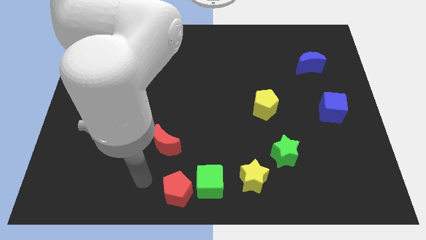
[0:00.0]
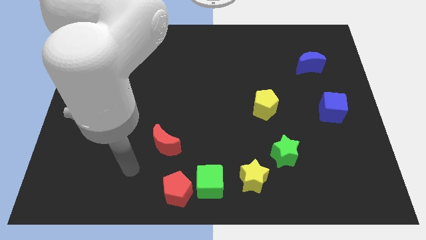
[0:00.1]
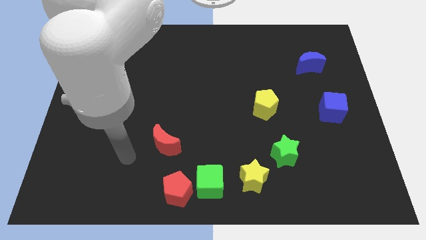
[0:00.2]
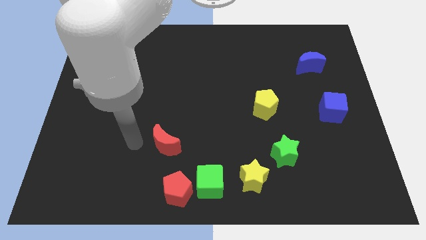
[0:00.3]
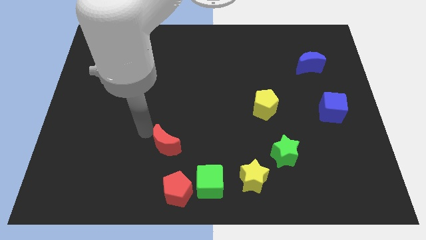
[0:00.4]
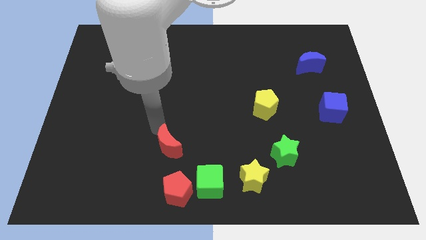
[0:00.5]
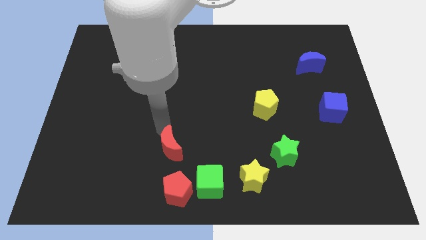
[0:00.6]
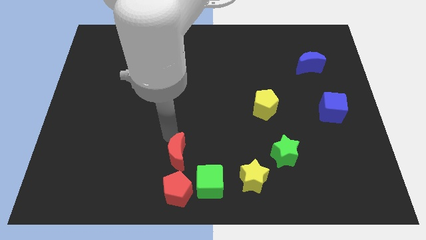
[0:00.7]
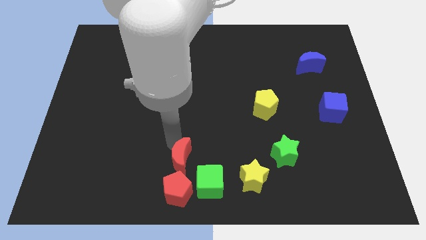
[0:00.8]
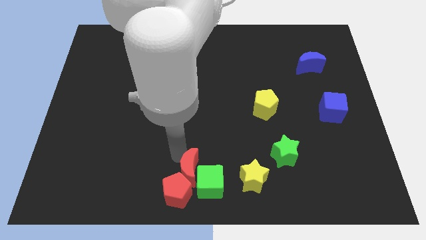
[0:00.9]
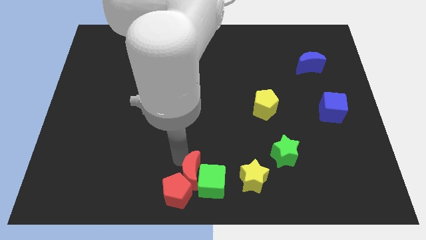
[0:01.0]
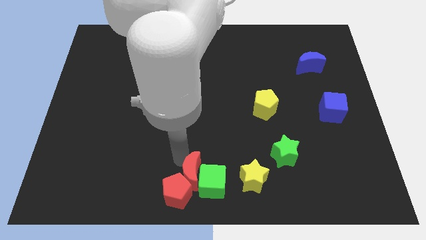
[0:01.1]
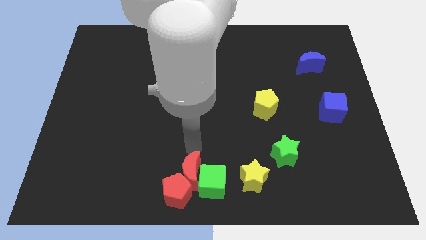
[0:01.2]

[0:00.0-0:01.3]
move the red crescent into the group of blocks

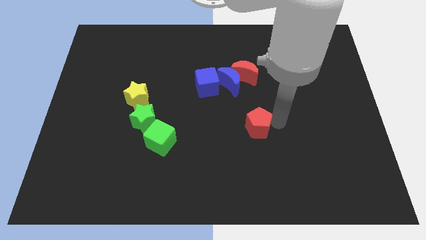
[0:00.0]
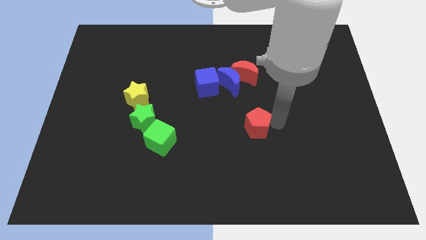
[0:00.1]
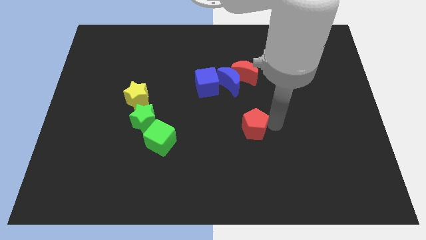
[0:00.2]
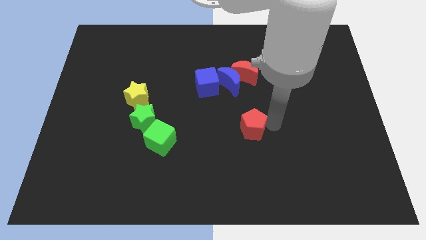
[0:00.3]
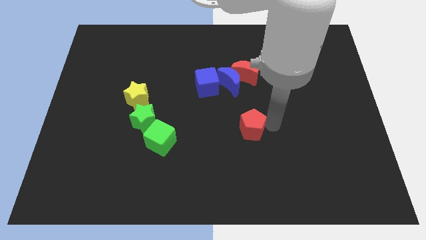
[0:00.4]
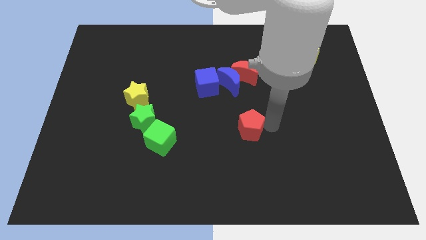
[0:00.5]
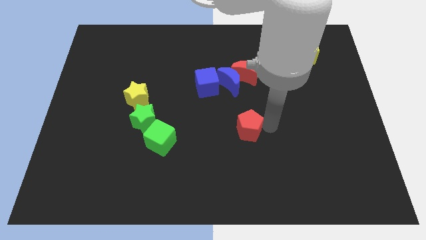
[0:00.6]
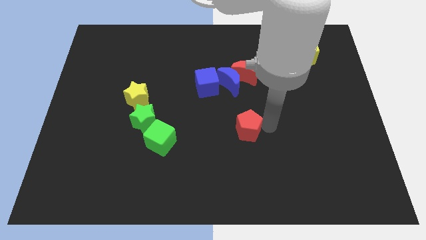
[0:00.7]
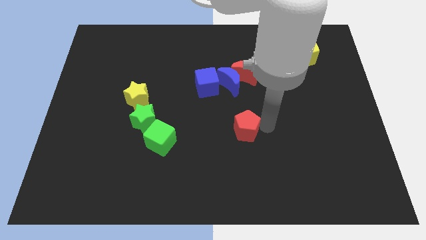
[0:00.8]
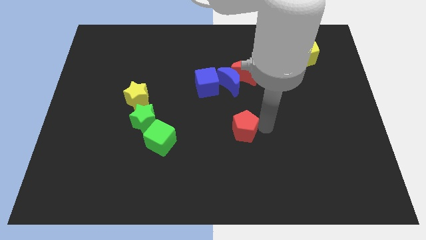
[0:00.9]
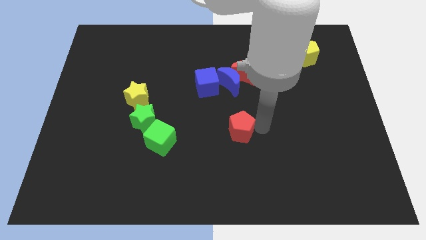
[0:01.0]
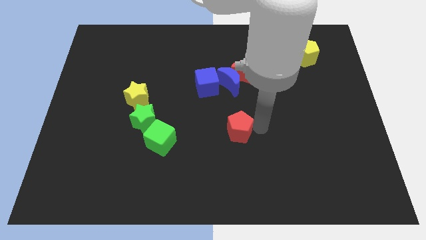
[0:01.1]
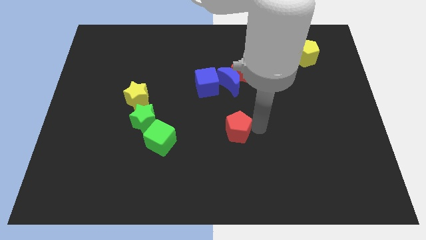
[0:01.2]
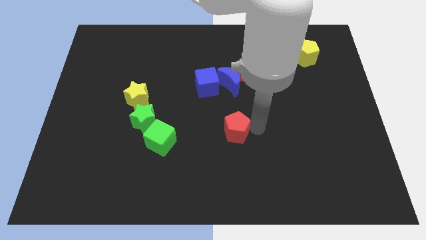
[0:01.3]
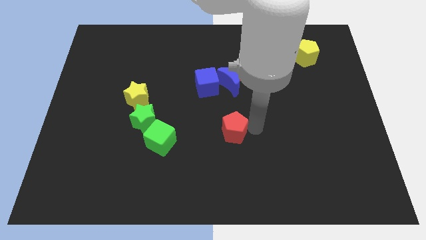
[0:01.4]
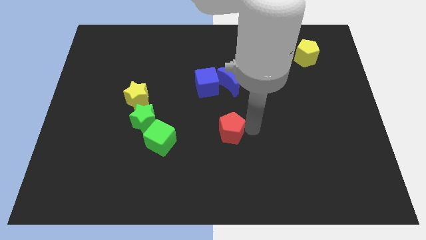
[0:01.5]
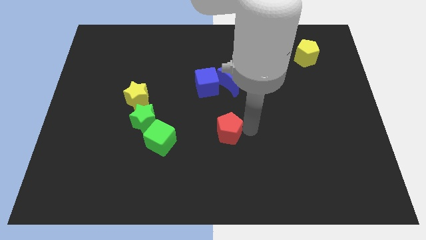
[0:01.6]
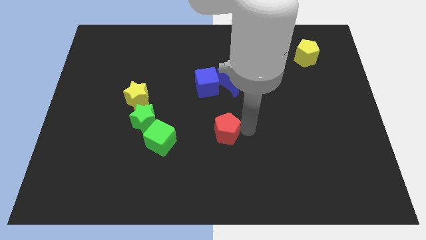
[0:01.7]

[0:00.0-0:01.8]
push the red pentagon diagonally top right to green cube

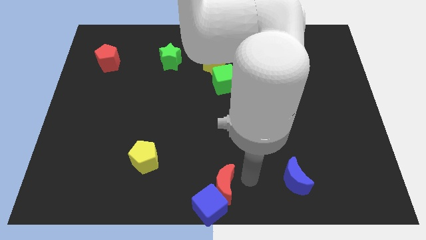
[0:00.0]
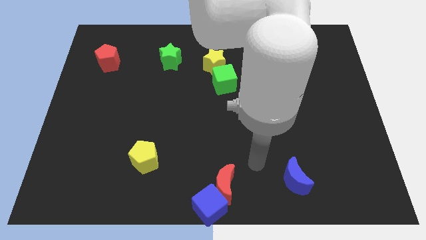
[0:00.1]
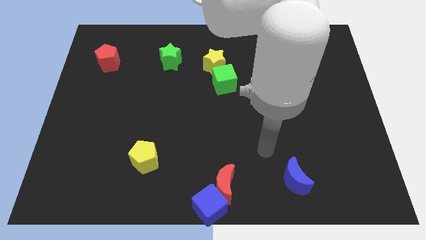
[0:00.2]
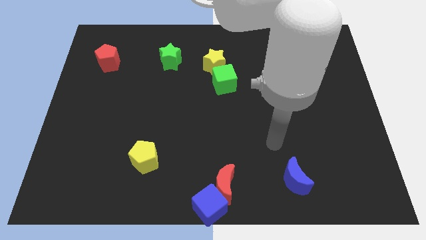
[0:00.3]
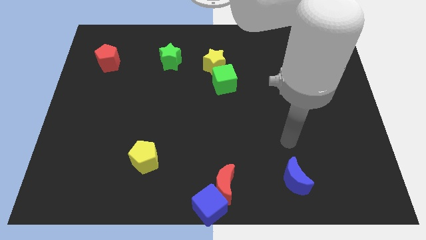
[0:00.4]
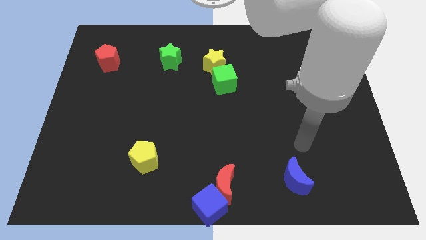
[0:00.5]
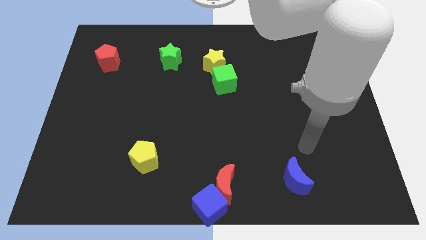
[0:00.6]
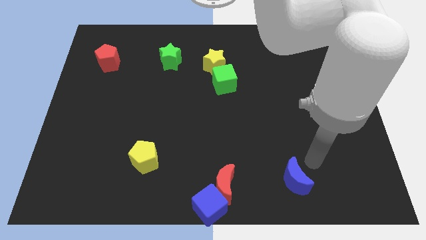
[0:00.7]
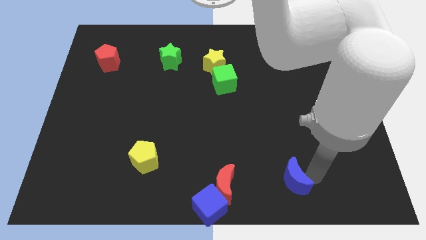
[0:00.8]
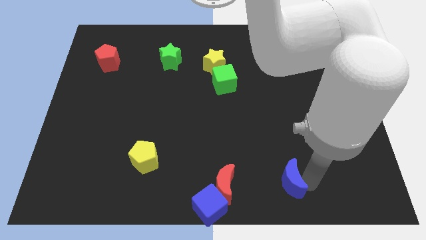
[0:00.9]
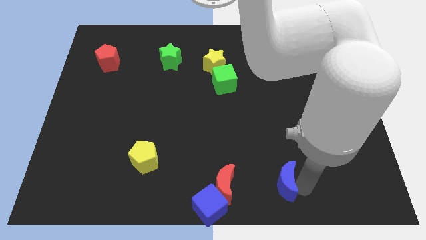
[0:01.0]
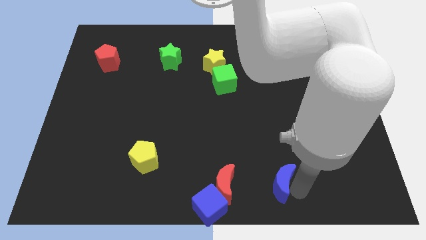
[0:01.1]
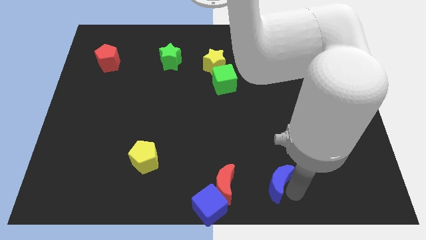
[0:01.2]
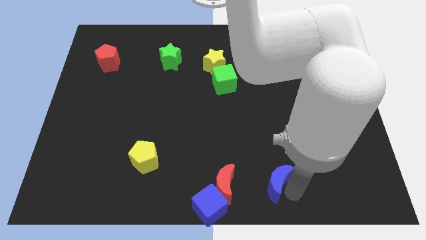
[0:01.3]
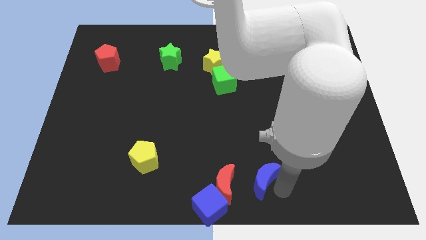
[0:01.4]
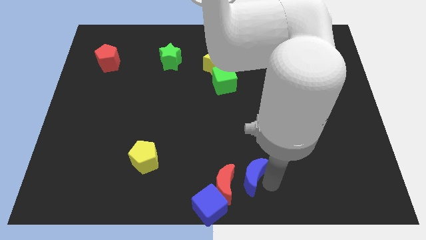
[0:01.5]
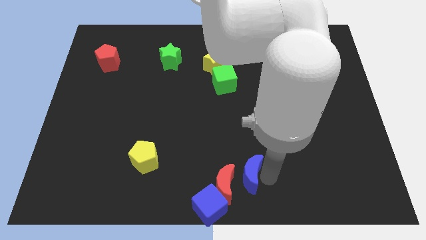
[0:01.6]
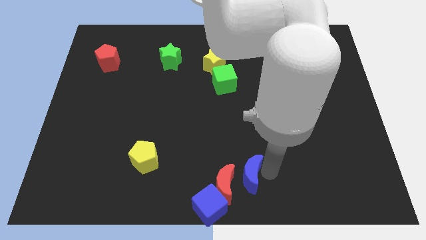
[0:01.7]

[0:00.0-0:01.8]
push the blue moon to the right of red moon

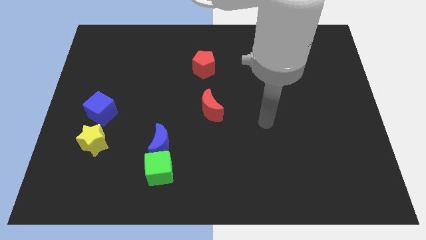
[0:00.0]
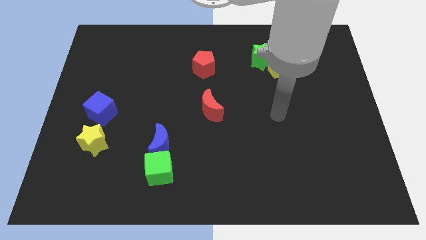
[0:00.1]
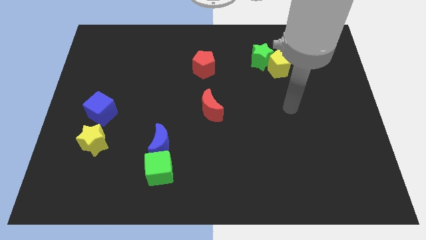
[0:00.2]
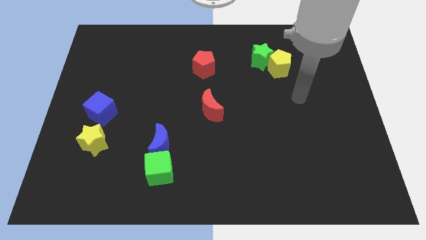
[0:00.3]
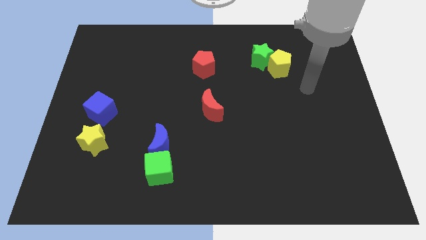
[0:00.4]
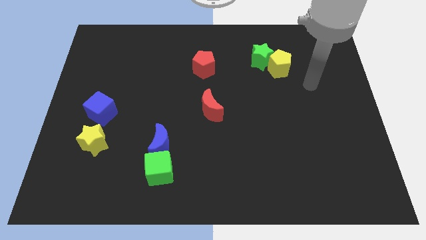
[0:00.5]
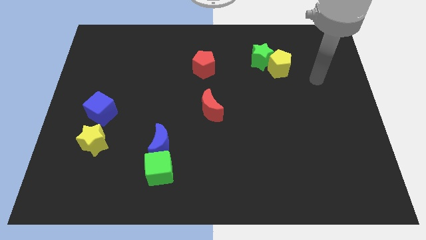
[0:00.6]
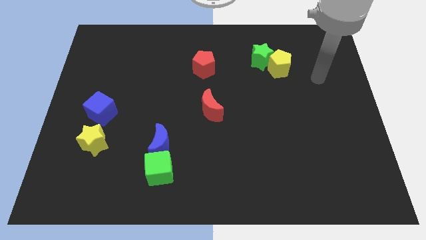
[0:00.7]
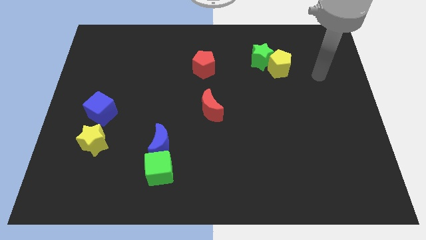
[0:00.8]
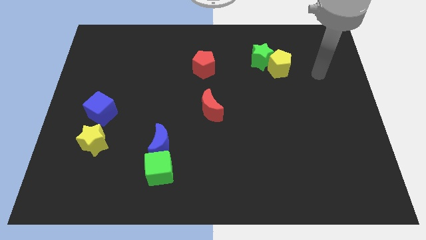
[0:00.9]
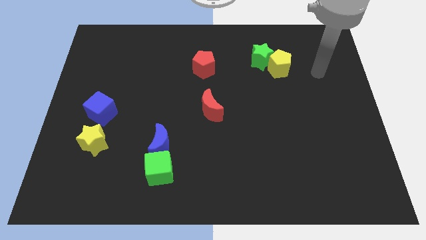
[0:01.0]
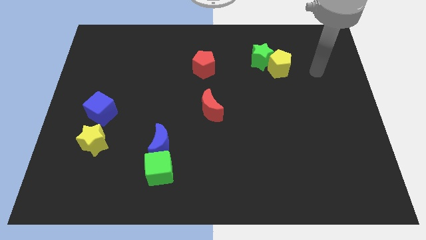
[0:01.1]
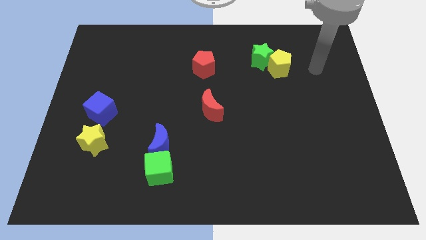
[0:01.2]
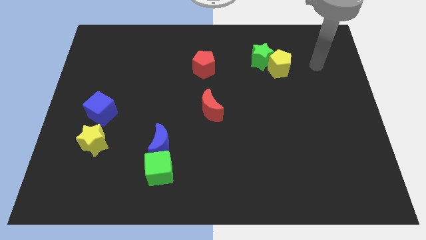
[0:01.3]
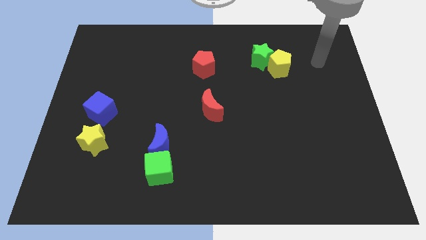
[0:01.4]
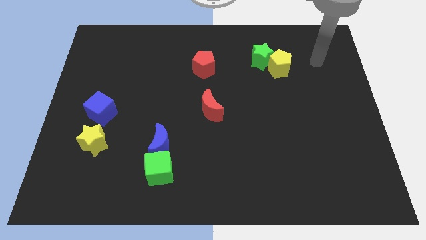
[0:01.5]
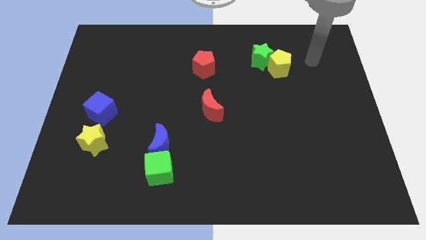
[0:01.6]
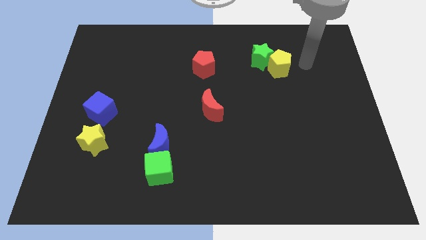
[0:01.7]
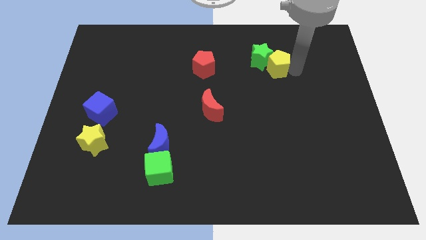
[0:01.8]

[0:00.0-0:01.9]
move your arm to the right side of the yellow pentagon

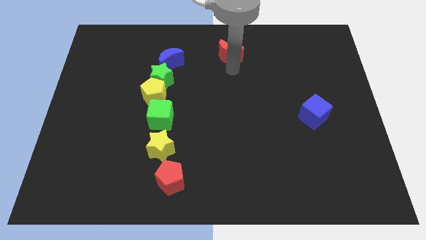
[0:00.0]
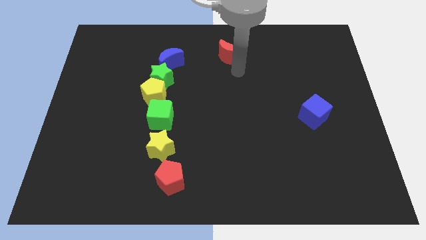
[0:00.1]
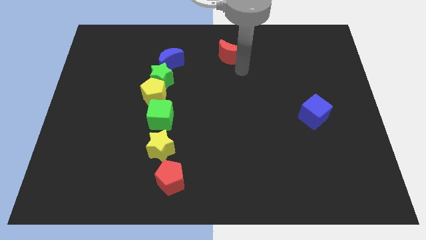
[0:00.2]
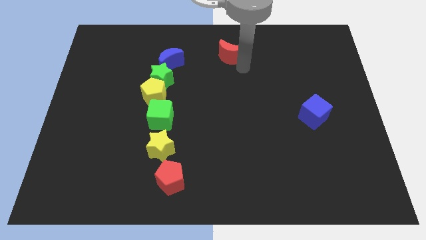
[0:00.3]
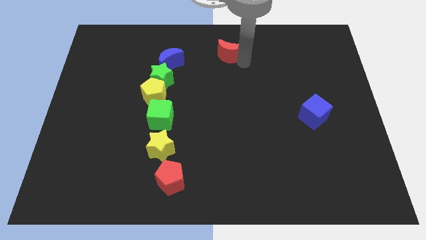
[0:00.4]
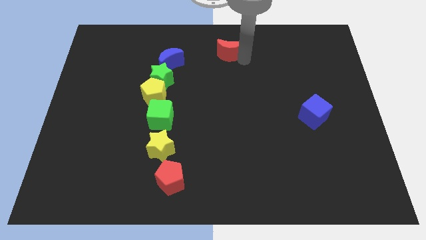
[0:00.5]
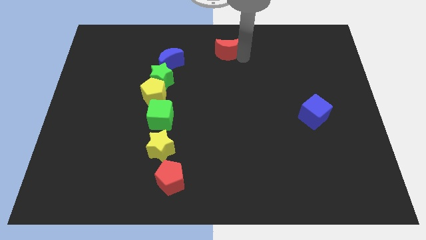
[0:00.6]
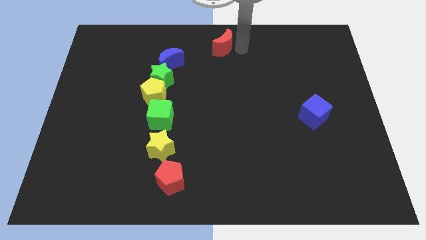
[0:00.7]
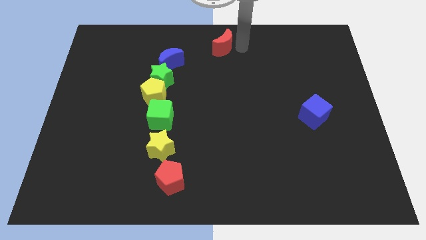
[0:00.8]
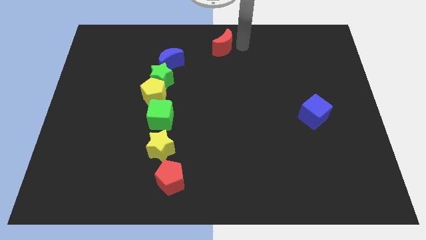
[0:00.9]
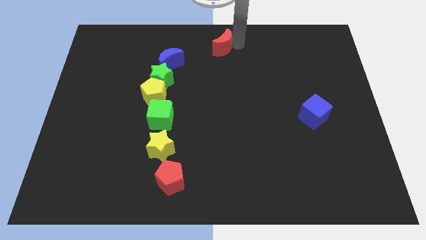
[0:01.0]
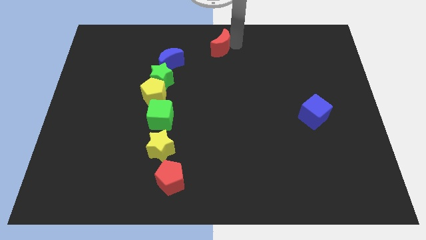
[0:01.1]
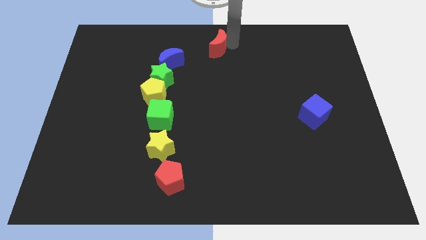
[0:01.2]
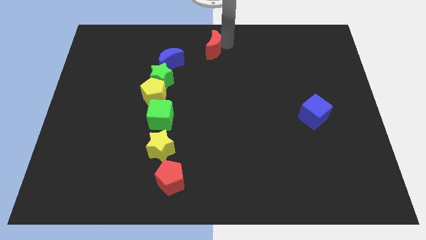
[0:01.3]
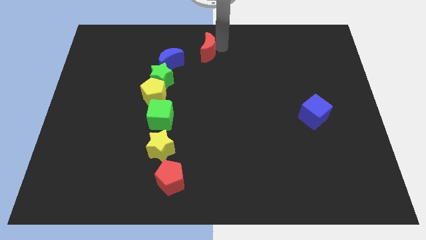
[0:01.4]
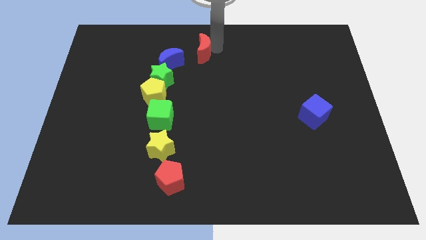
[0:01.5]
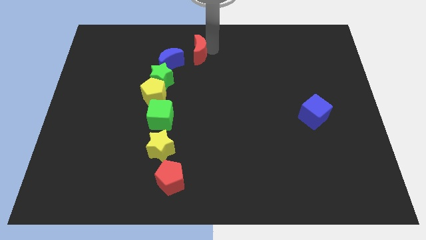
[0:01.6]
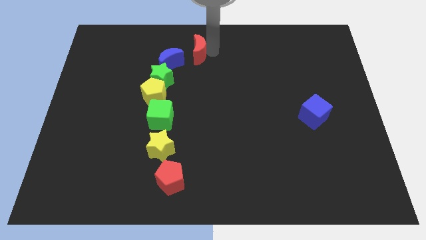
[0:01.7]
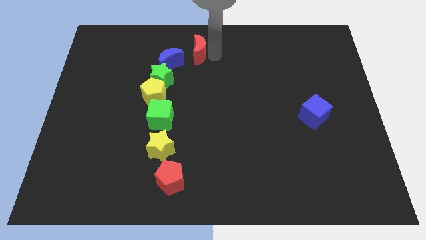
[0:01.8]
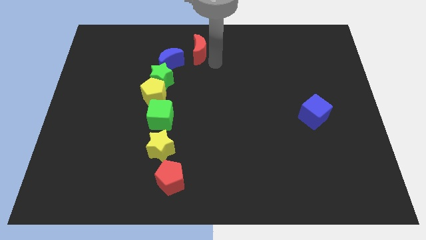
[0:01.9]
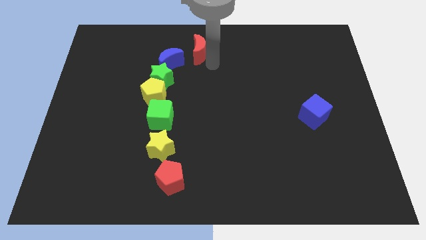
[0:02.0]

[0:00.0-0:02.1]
move the red moon to the vertical line

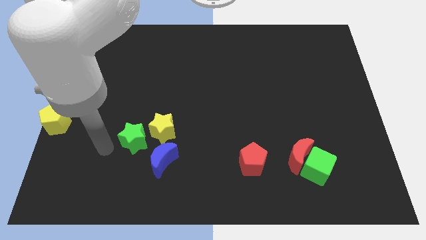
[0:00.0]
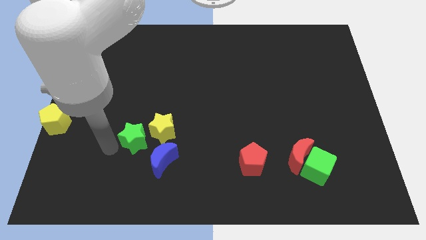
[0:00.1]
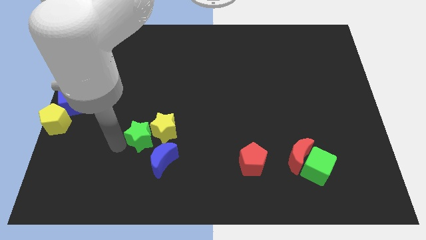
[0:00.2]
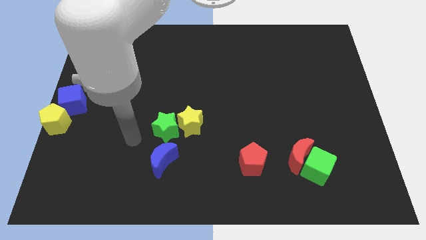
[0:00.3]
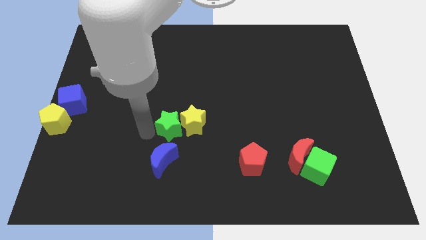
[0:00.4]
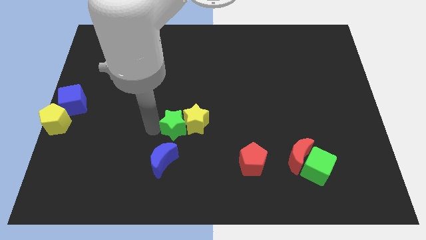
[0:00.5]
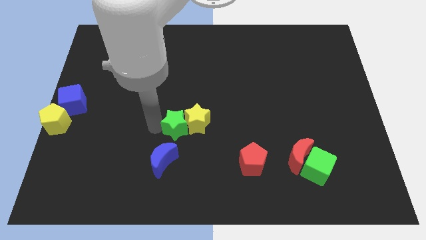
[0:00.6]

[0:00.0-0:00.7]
move the green star into the yellow star
